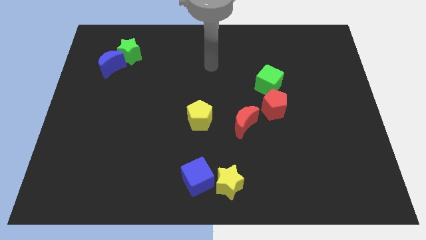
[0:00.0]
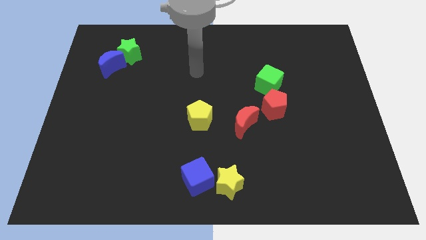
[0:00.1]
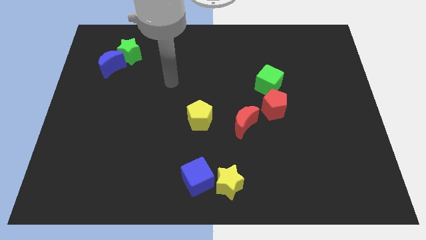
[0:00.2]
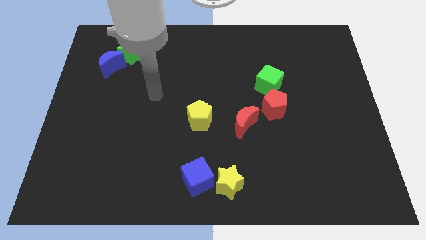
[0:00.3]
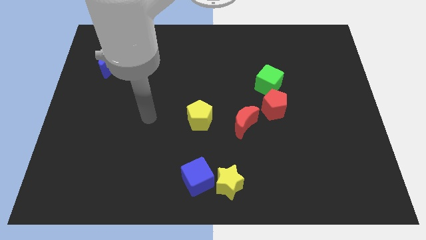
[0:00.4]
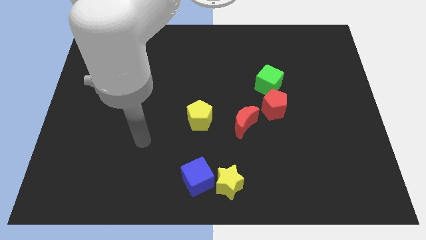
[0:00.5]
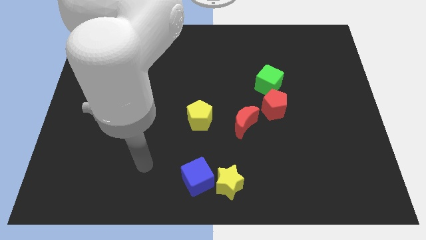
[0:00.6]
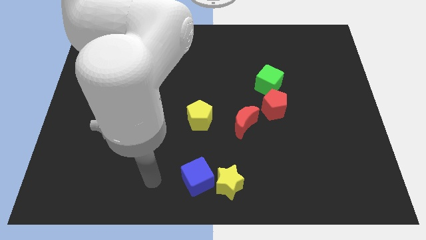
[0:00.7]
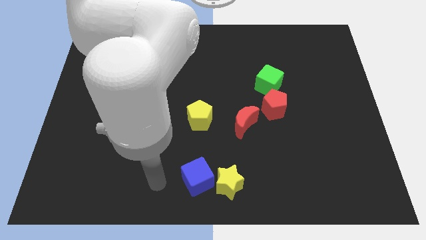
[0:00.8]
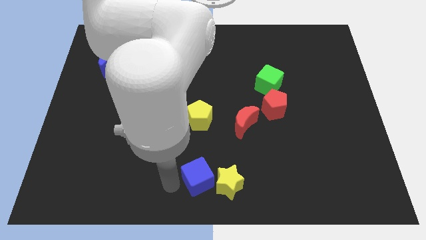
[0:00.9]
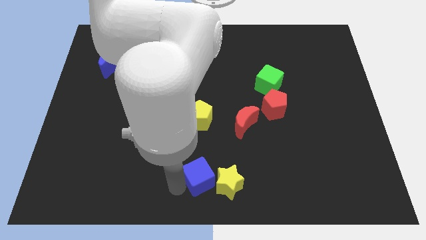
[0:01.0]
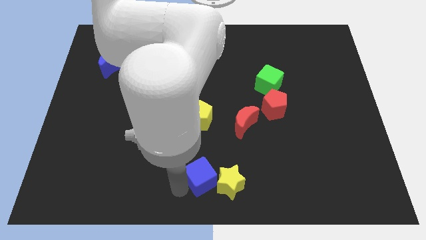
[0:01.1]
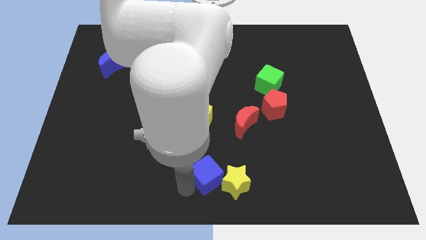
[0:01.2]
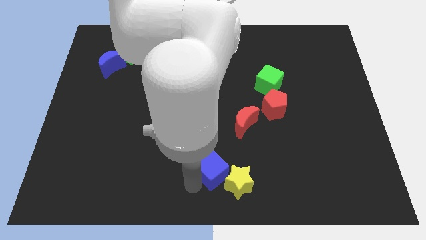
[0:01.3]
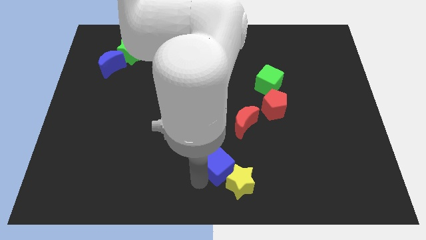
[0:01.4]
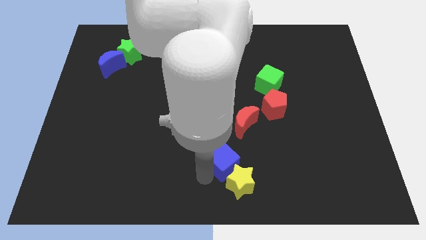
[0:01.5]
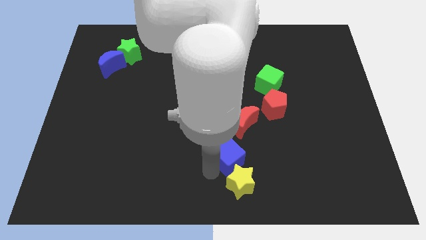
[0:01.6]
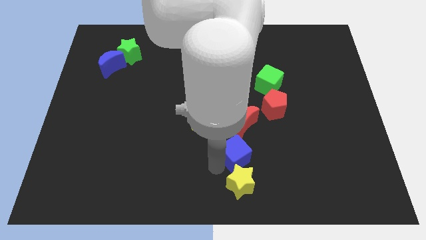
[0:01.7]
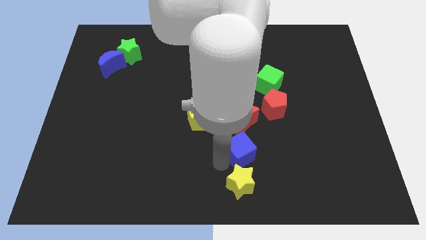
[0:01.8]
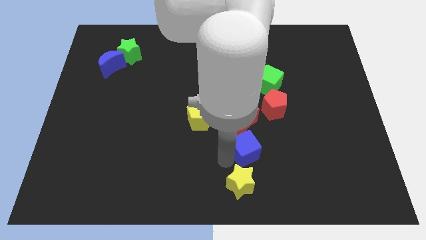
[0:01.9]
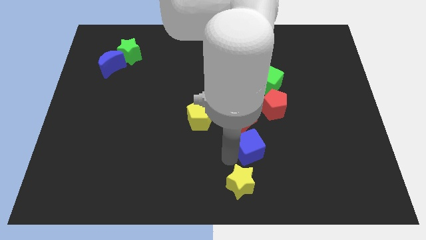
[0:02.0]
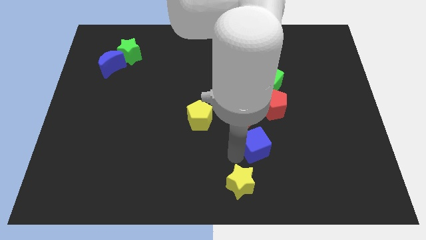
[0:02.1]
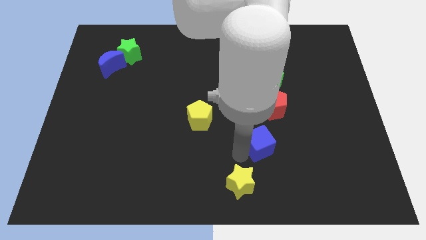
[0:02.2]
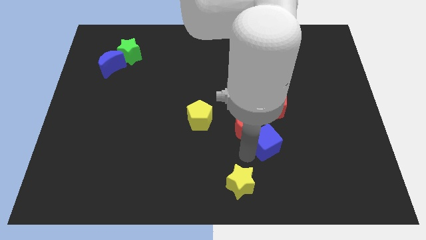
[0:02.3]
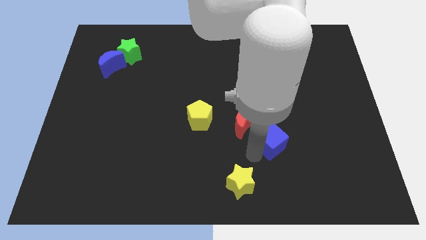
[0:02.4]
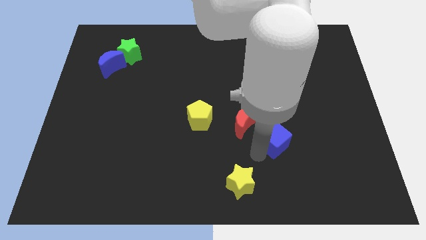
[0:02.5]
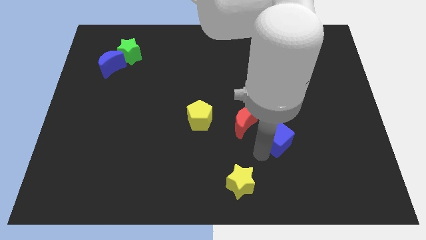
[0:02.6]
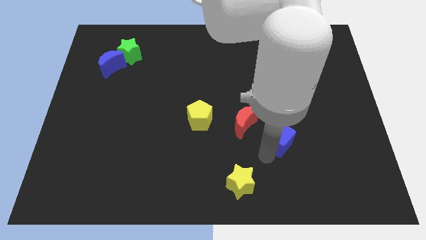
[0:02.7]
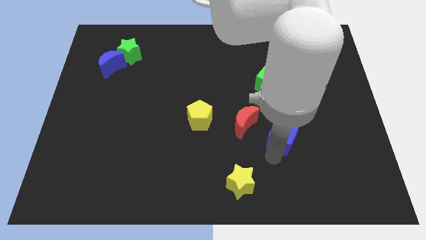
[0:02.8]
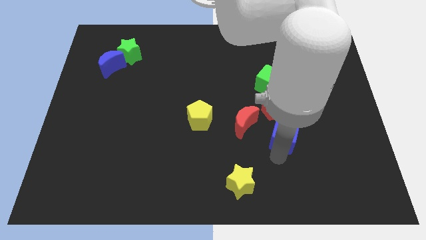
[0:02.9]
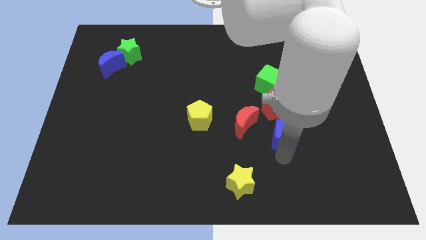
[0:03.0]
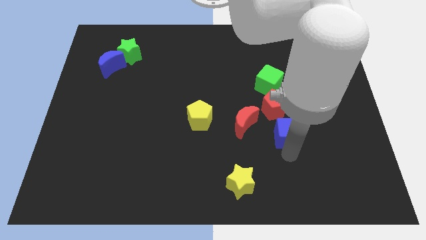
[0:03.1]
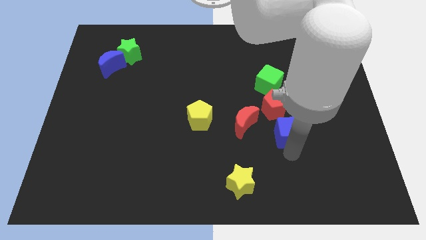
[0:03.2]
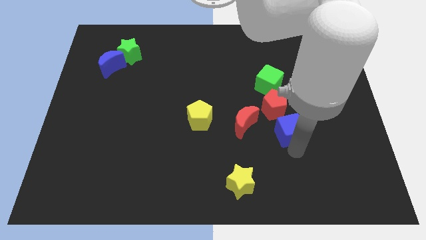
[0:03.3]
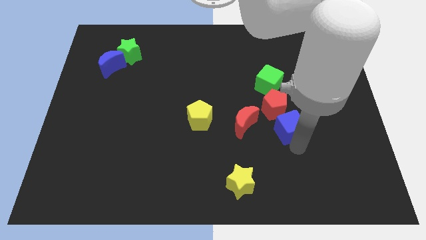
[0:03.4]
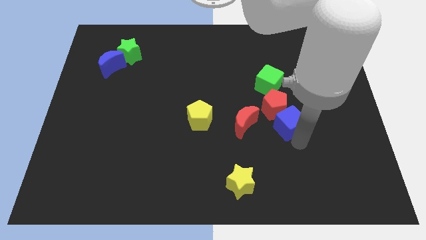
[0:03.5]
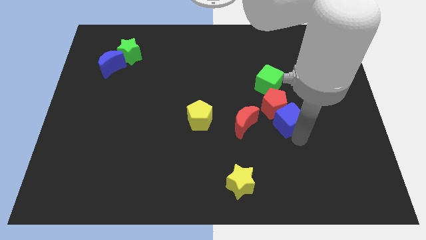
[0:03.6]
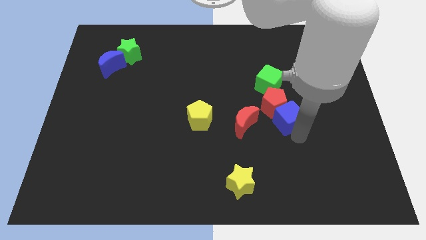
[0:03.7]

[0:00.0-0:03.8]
push the blue cube towards the red pentagon

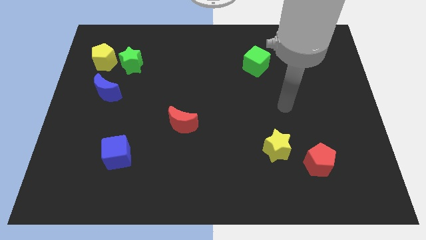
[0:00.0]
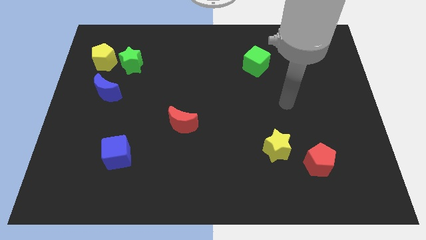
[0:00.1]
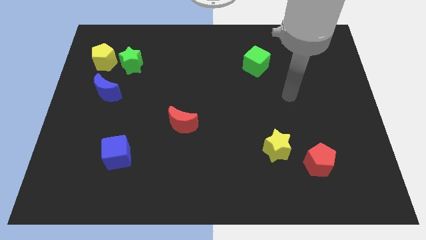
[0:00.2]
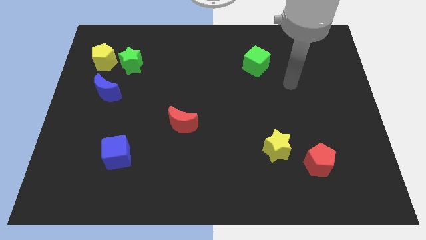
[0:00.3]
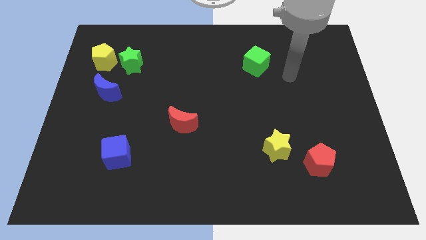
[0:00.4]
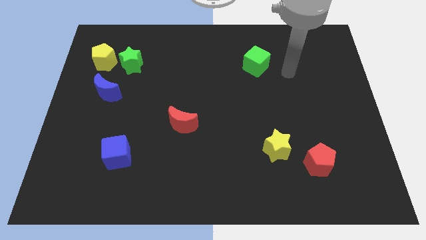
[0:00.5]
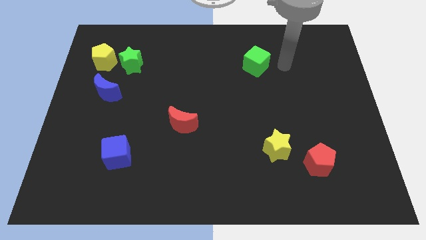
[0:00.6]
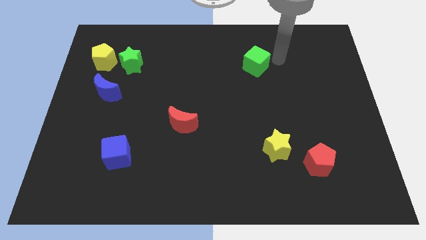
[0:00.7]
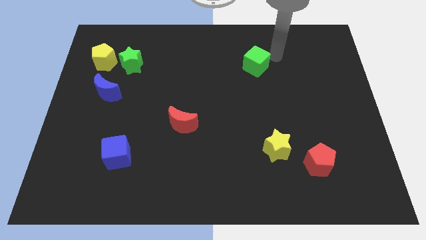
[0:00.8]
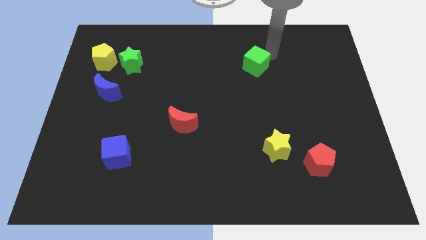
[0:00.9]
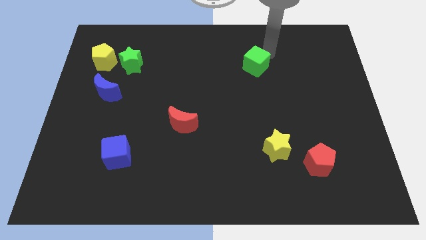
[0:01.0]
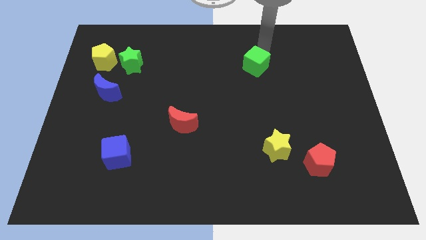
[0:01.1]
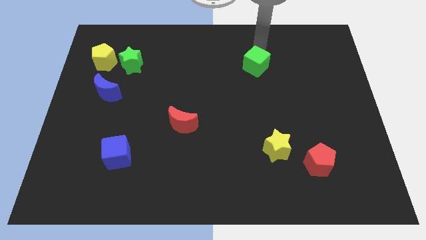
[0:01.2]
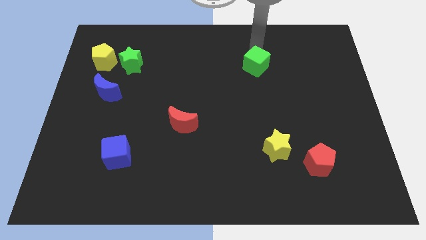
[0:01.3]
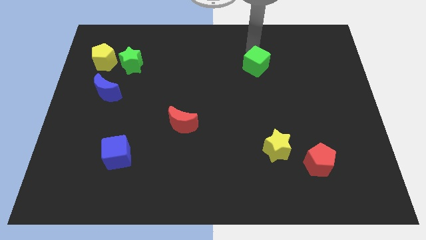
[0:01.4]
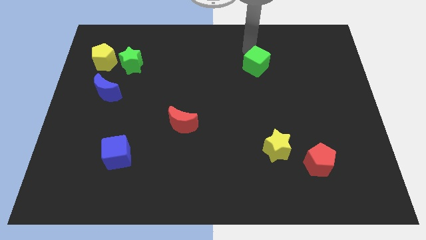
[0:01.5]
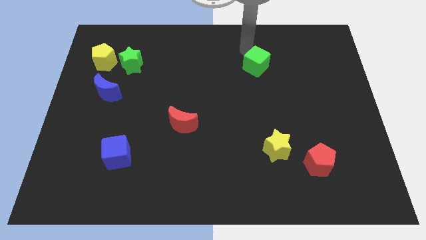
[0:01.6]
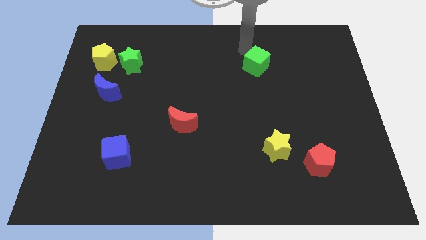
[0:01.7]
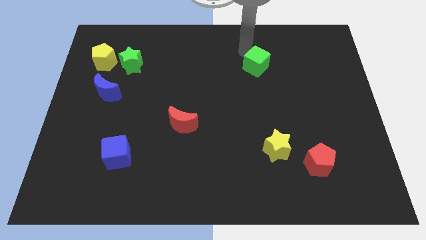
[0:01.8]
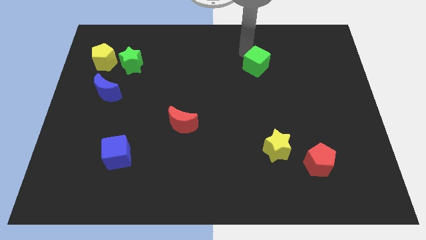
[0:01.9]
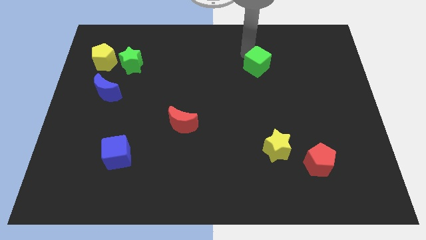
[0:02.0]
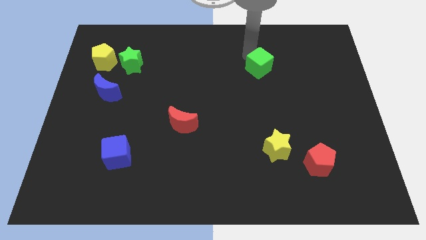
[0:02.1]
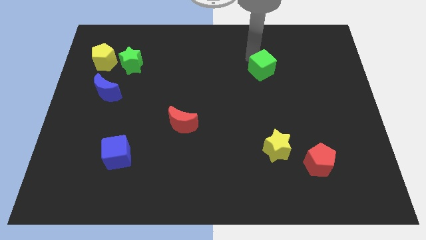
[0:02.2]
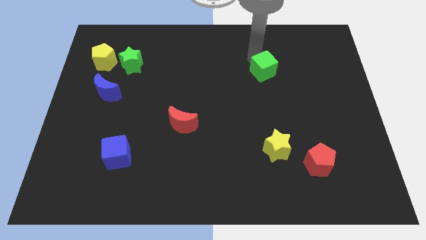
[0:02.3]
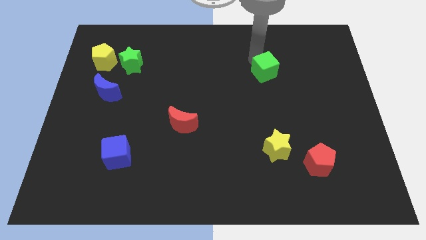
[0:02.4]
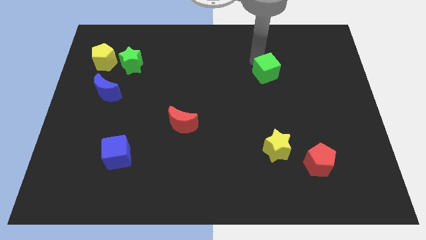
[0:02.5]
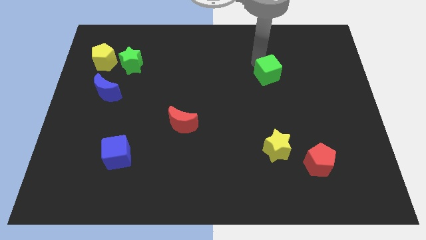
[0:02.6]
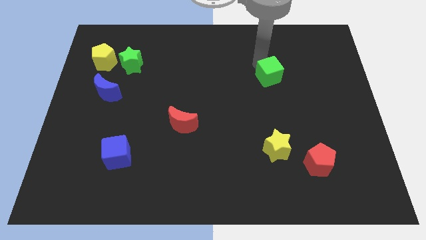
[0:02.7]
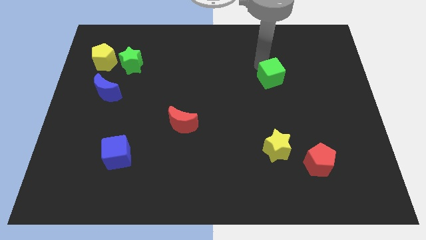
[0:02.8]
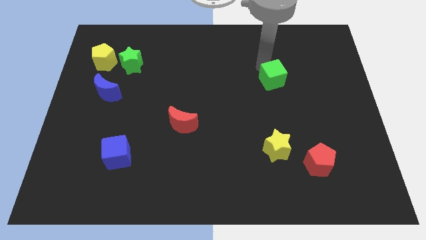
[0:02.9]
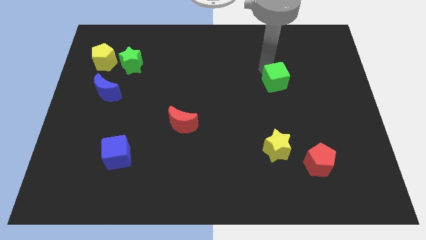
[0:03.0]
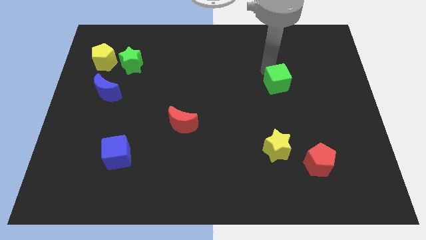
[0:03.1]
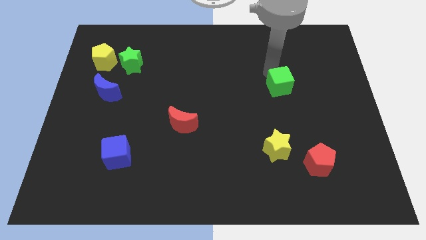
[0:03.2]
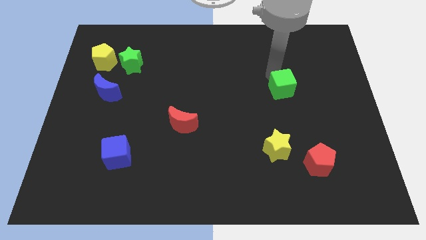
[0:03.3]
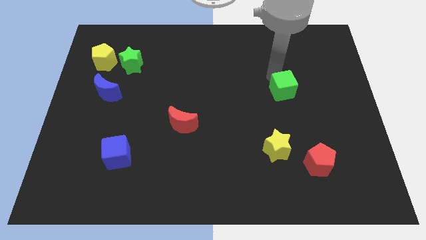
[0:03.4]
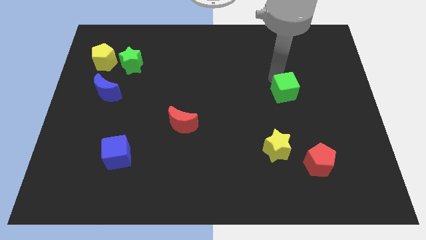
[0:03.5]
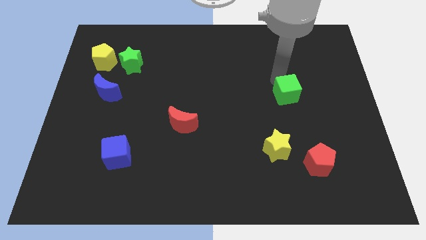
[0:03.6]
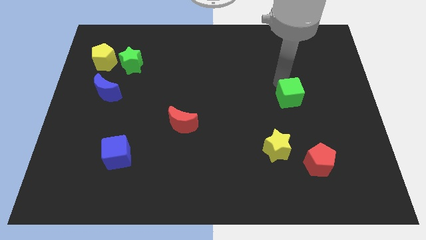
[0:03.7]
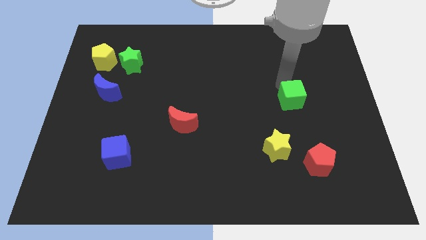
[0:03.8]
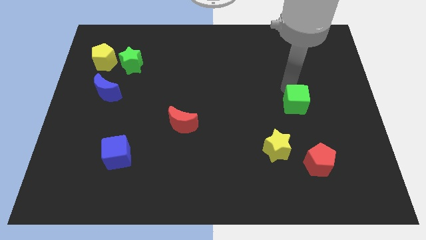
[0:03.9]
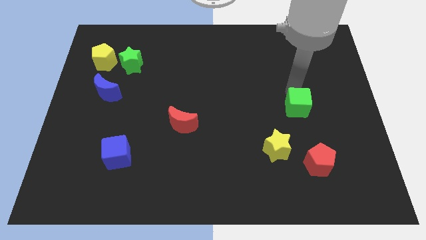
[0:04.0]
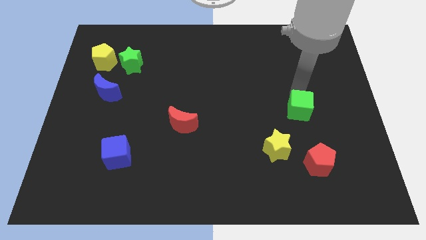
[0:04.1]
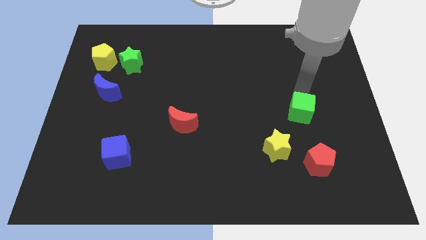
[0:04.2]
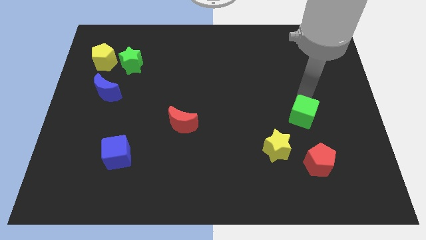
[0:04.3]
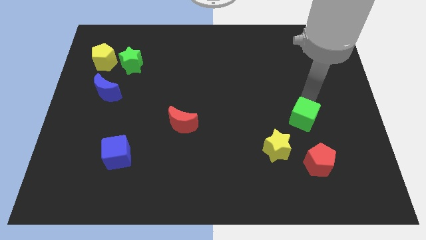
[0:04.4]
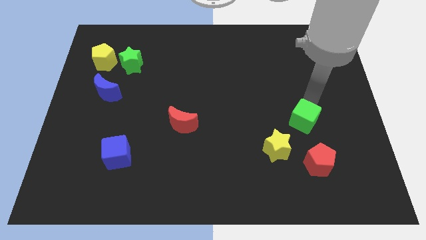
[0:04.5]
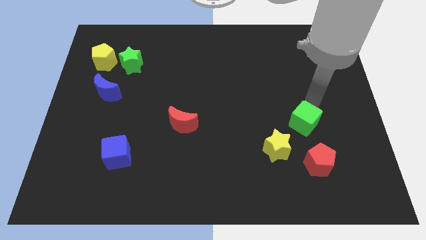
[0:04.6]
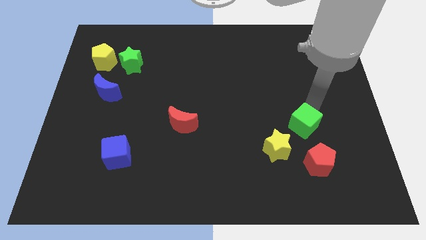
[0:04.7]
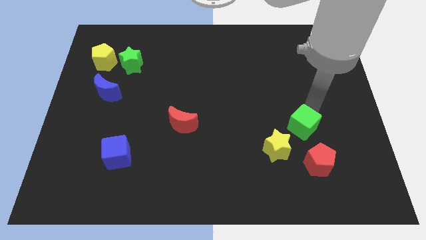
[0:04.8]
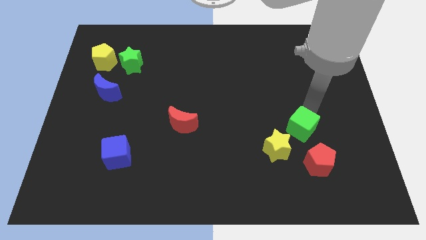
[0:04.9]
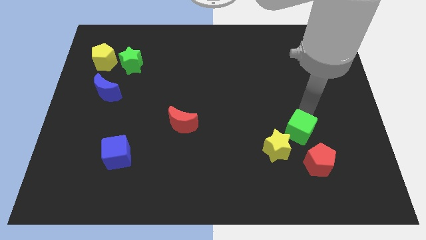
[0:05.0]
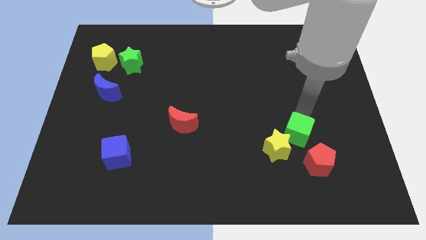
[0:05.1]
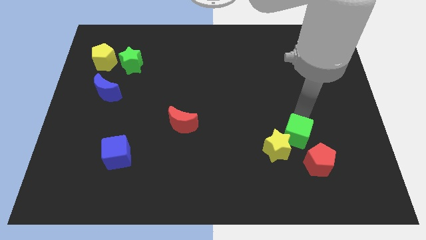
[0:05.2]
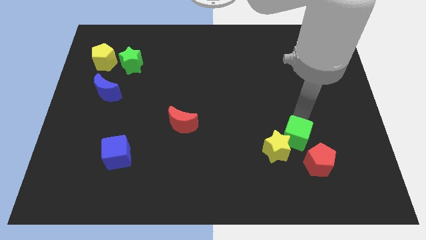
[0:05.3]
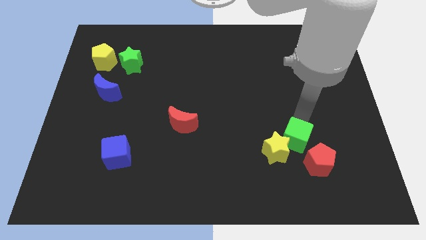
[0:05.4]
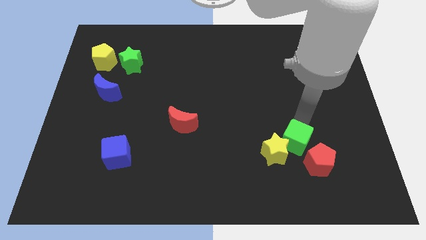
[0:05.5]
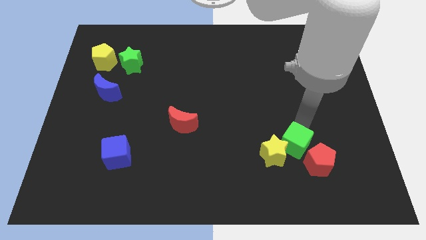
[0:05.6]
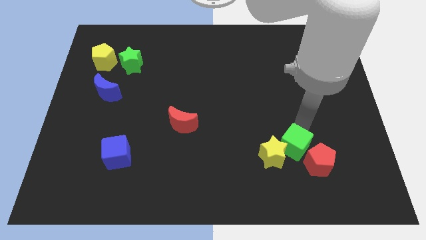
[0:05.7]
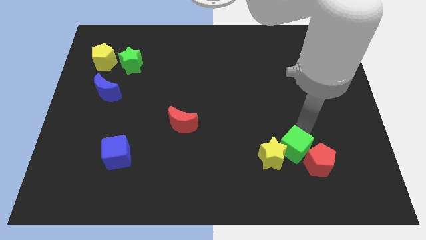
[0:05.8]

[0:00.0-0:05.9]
push the green cube to the red pentagon
